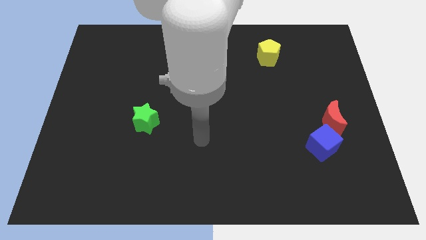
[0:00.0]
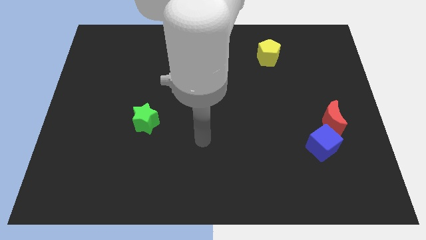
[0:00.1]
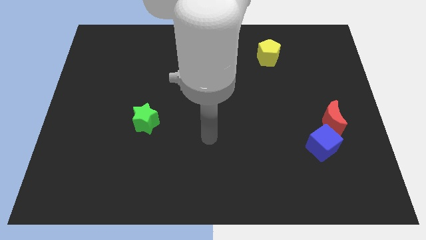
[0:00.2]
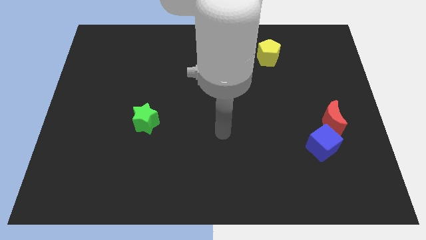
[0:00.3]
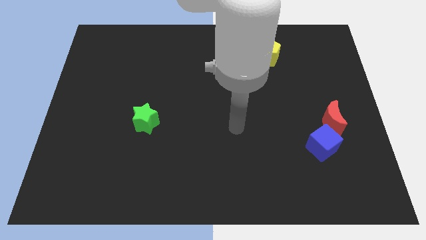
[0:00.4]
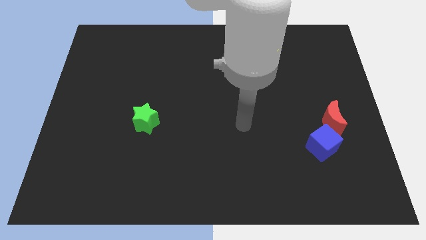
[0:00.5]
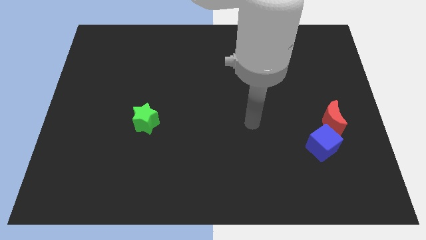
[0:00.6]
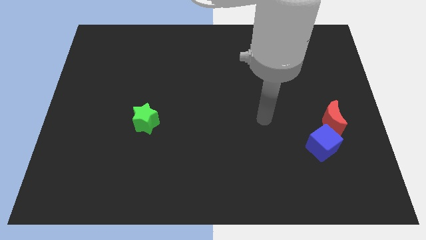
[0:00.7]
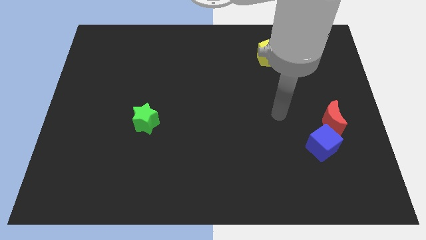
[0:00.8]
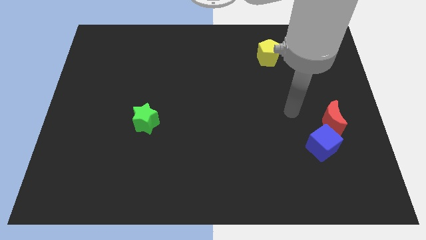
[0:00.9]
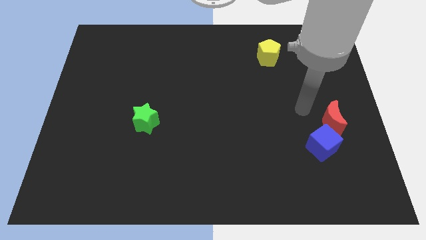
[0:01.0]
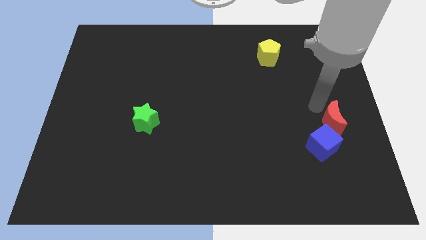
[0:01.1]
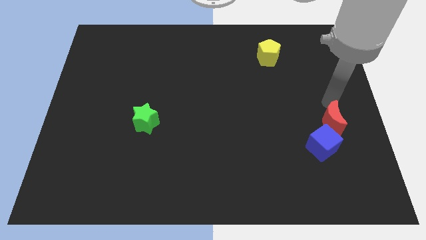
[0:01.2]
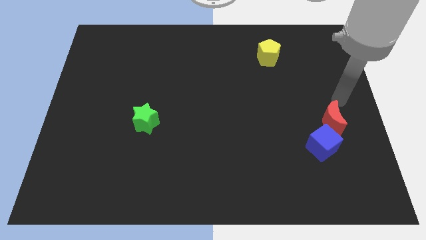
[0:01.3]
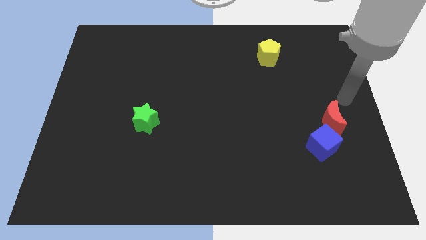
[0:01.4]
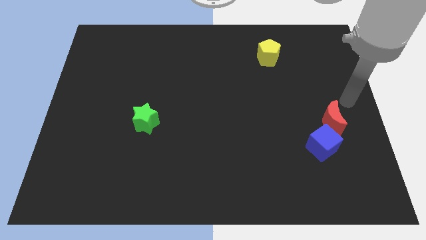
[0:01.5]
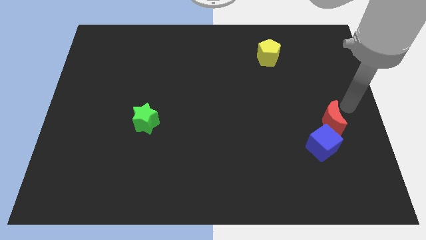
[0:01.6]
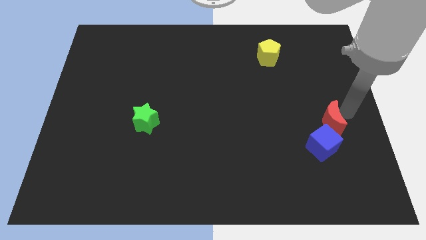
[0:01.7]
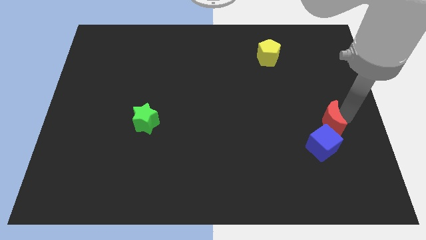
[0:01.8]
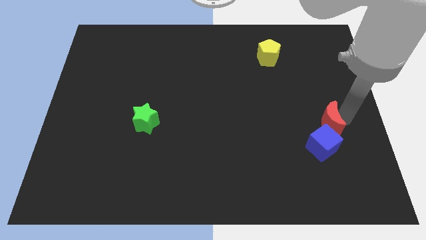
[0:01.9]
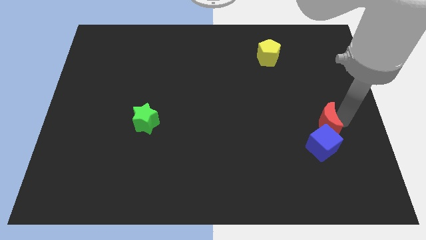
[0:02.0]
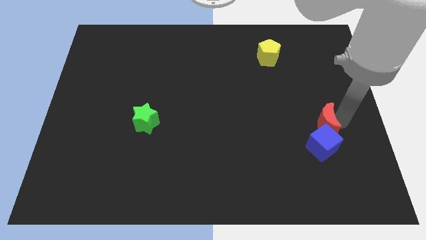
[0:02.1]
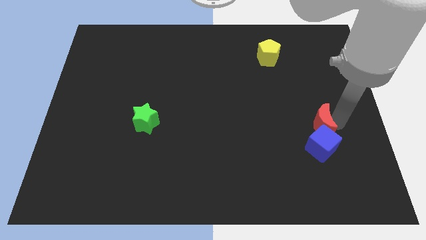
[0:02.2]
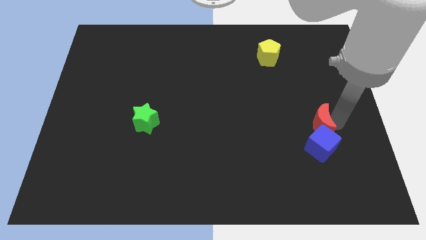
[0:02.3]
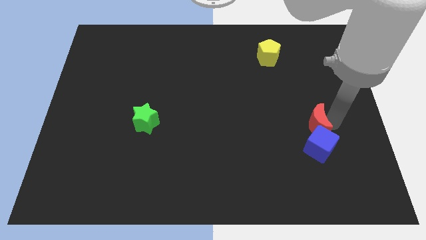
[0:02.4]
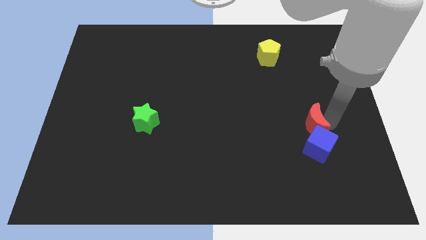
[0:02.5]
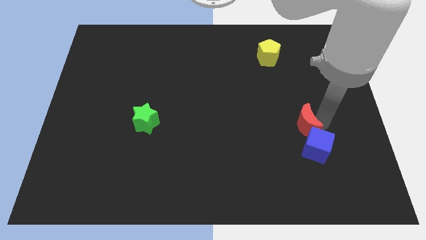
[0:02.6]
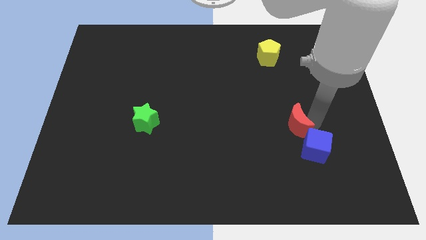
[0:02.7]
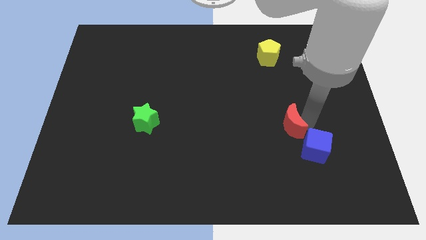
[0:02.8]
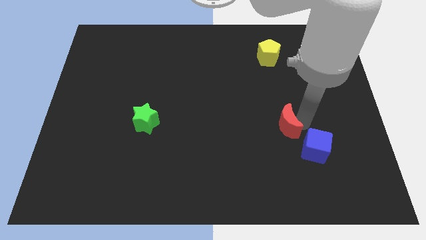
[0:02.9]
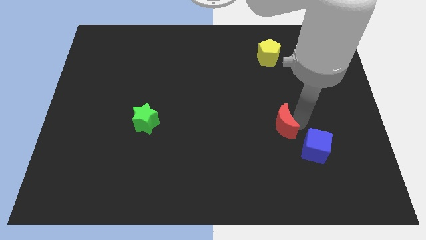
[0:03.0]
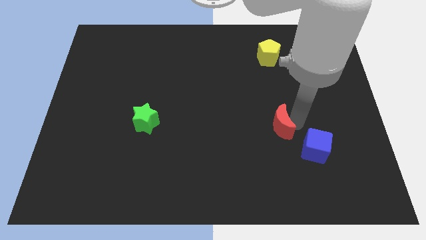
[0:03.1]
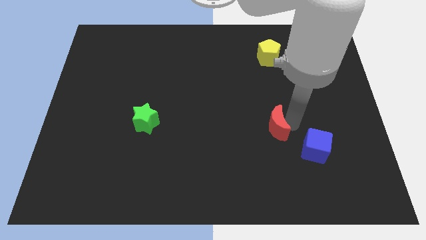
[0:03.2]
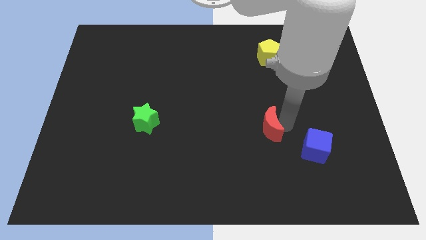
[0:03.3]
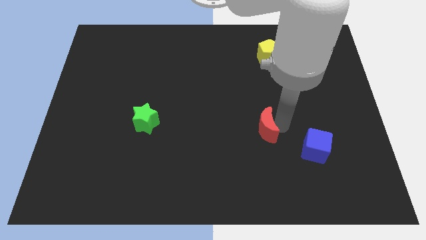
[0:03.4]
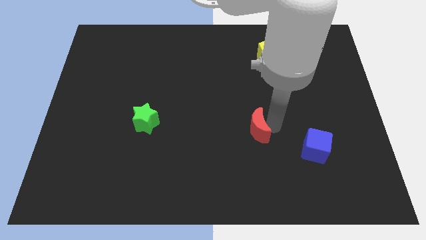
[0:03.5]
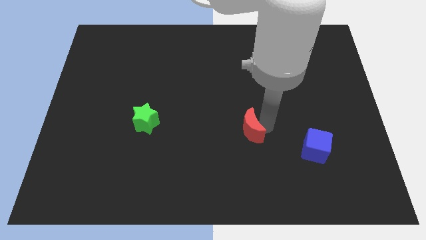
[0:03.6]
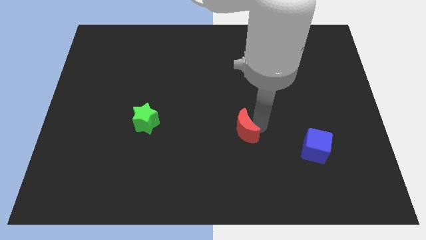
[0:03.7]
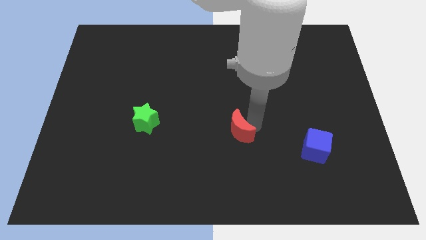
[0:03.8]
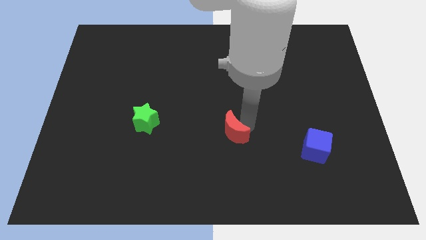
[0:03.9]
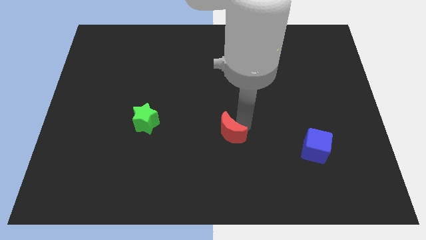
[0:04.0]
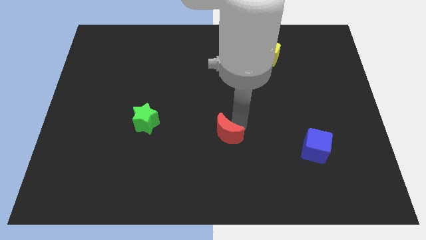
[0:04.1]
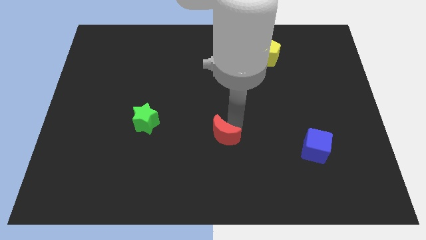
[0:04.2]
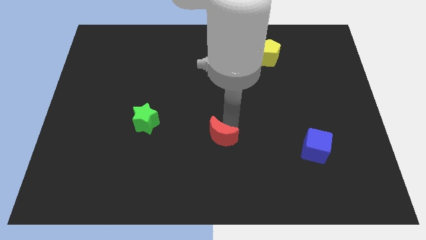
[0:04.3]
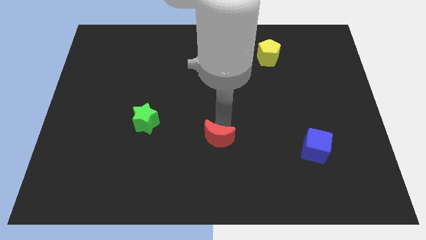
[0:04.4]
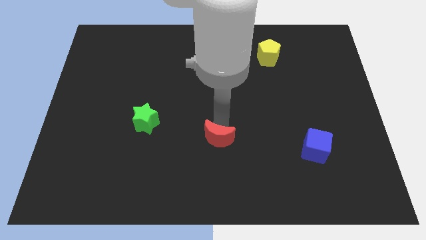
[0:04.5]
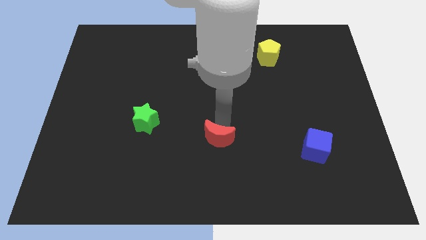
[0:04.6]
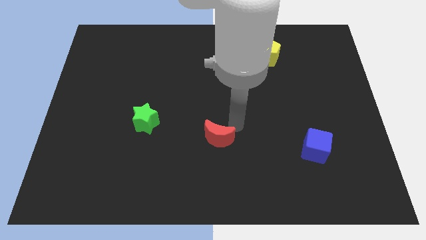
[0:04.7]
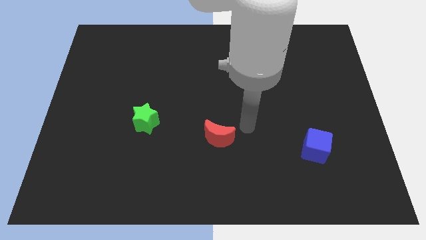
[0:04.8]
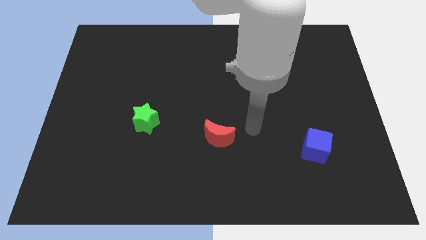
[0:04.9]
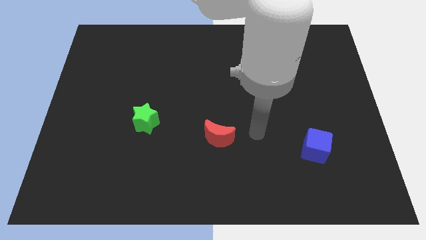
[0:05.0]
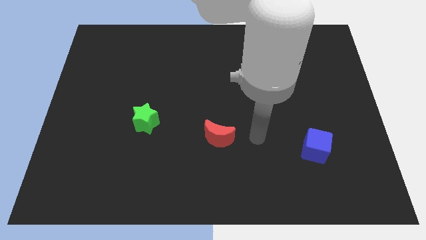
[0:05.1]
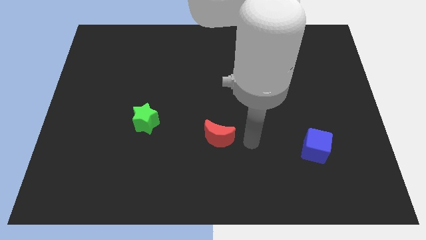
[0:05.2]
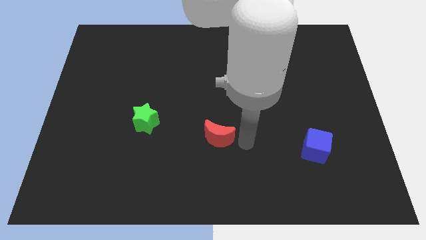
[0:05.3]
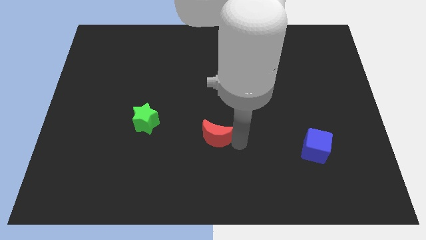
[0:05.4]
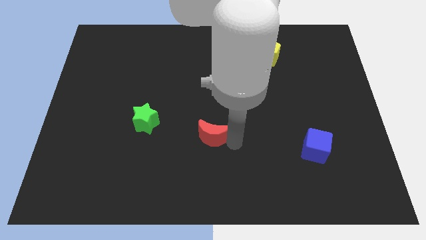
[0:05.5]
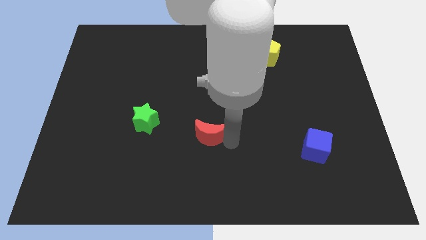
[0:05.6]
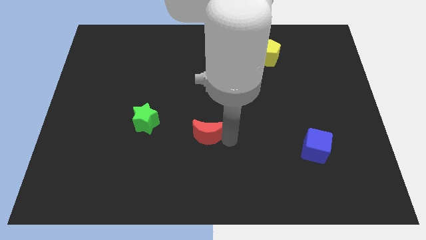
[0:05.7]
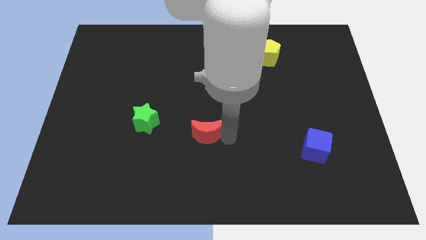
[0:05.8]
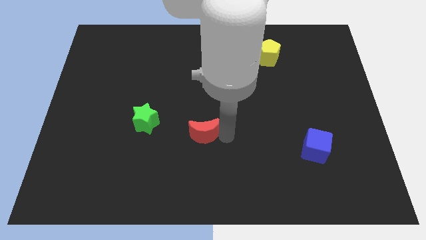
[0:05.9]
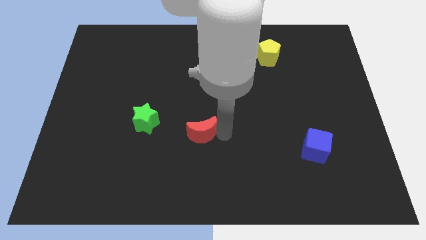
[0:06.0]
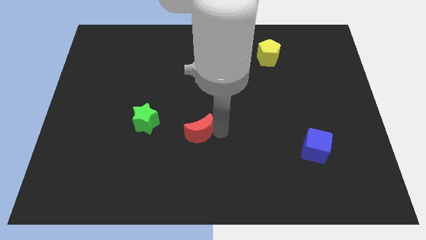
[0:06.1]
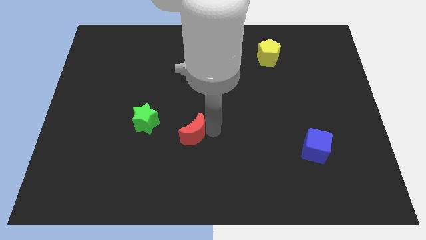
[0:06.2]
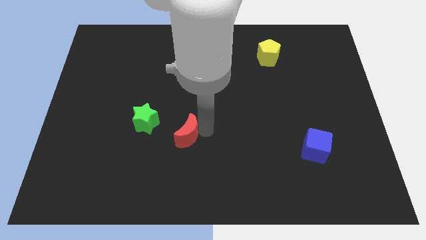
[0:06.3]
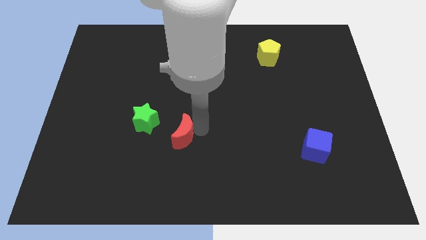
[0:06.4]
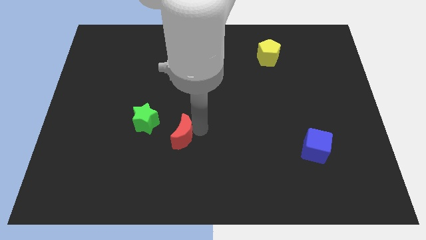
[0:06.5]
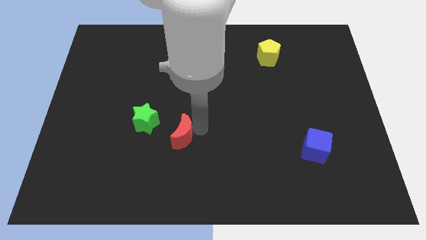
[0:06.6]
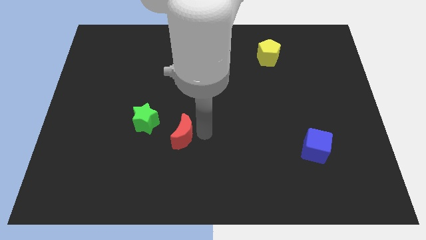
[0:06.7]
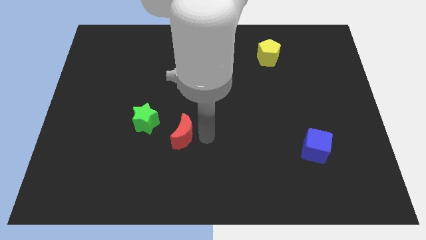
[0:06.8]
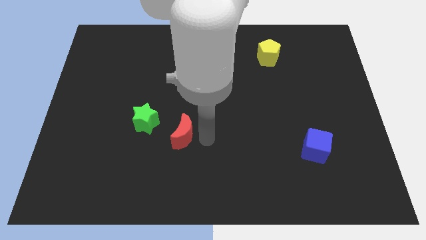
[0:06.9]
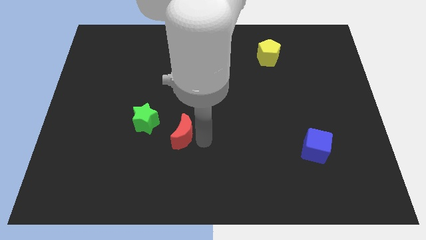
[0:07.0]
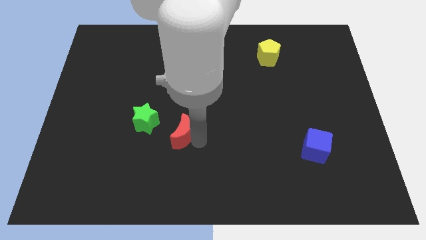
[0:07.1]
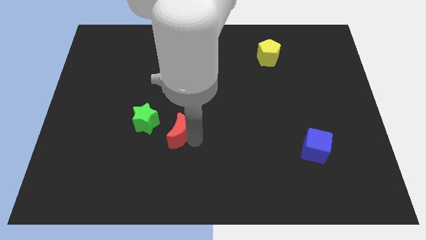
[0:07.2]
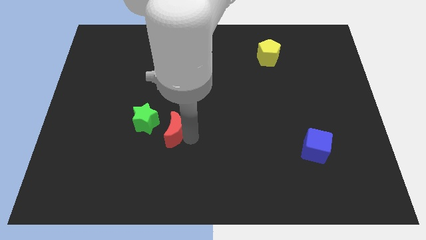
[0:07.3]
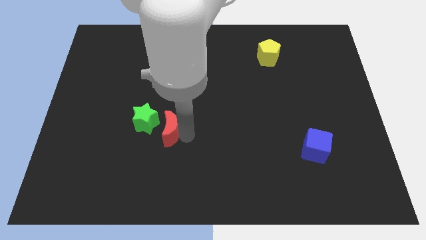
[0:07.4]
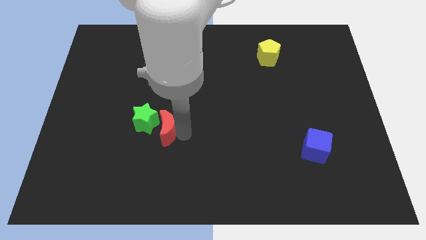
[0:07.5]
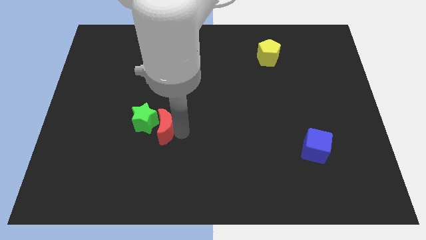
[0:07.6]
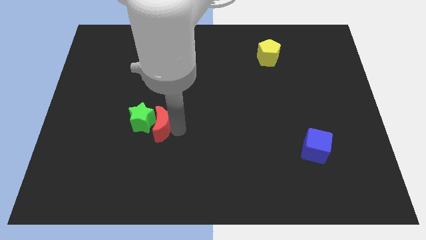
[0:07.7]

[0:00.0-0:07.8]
push the red block towards the green star

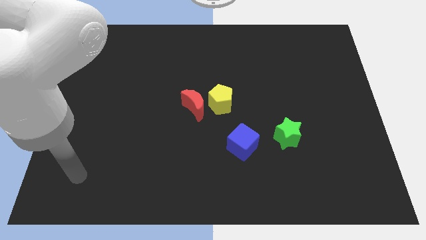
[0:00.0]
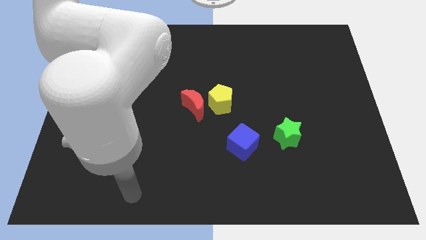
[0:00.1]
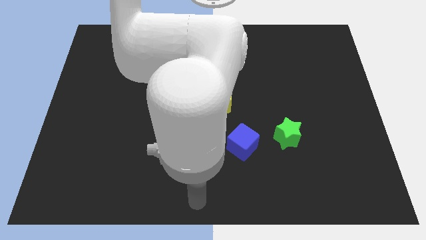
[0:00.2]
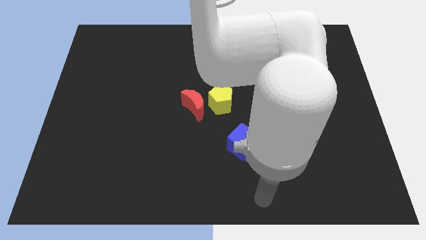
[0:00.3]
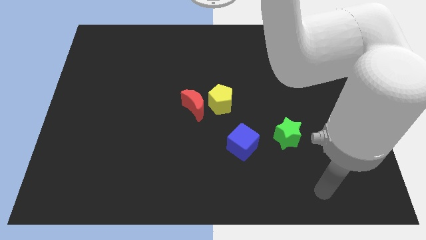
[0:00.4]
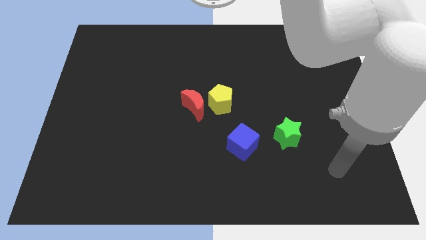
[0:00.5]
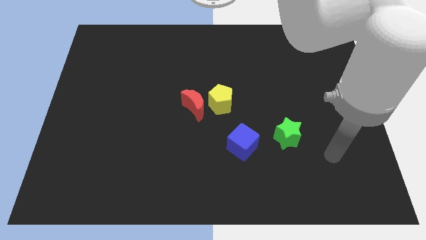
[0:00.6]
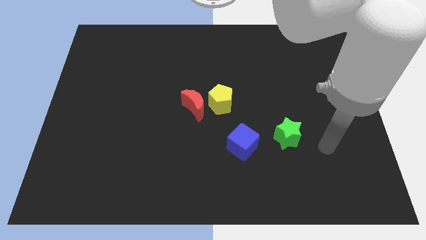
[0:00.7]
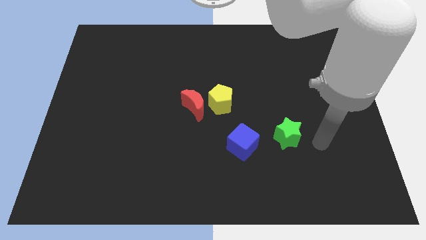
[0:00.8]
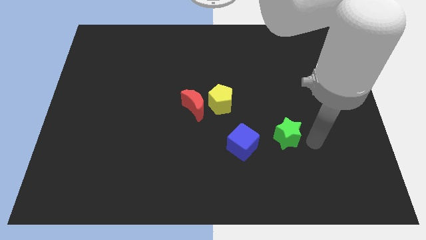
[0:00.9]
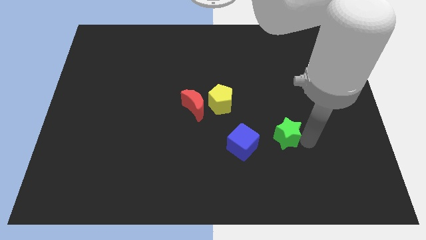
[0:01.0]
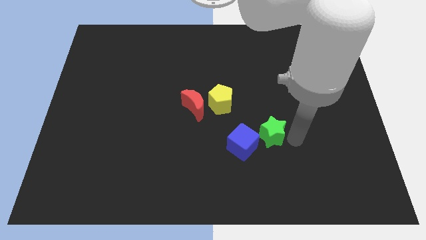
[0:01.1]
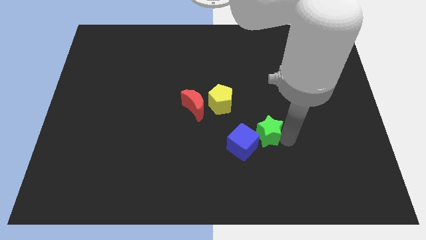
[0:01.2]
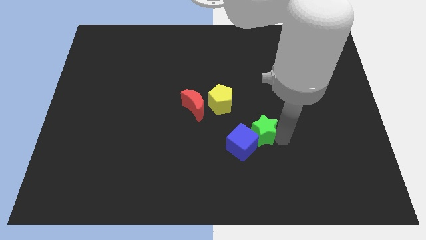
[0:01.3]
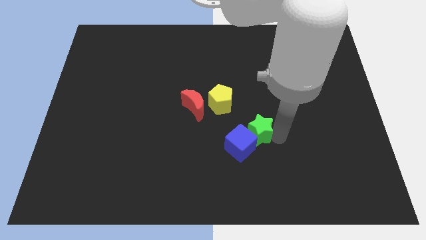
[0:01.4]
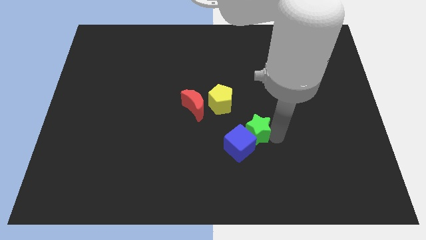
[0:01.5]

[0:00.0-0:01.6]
push the green star next to the blue block
